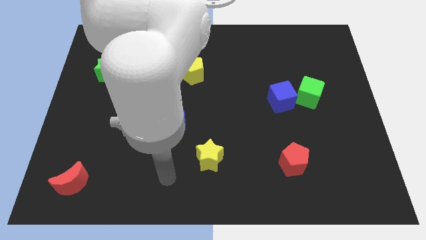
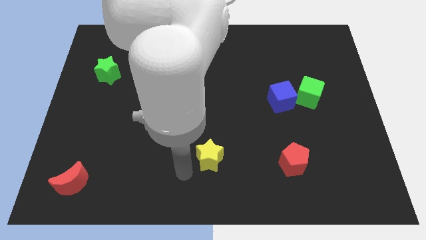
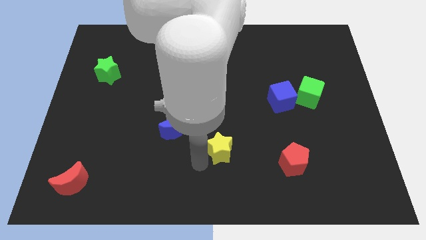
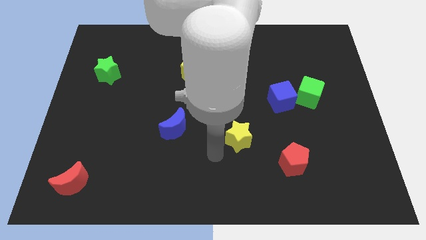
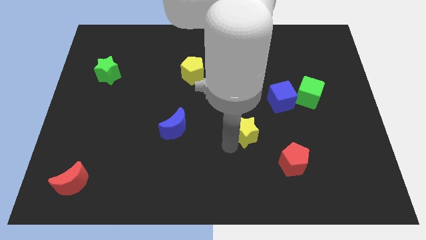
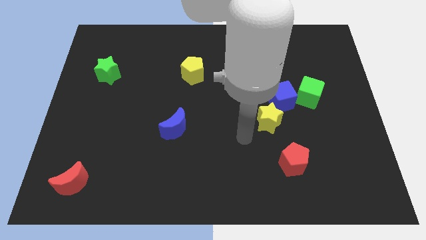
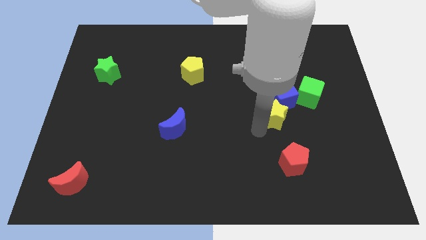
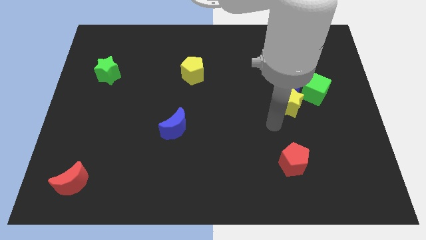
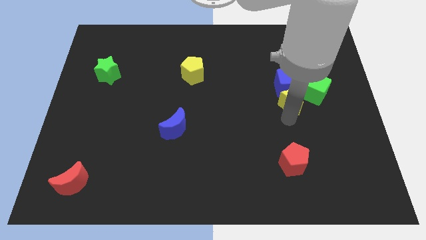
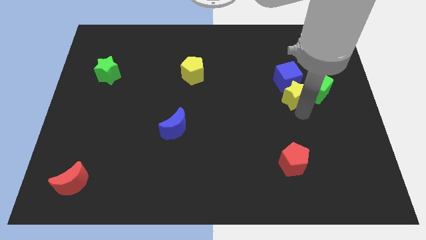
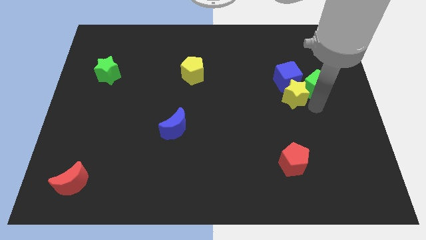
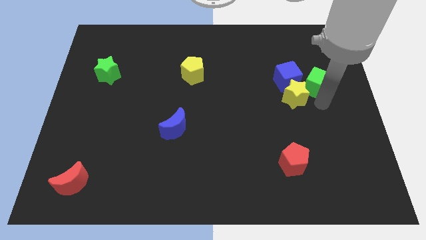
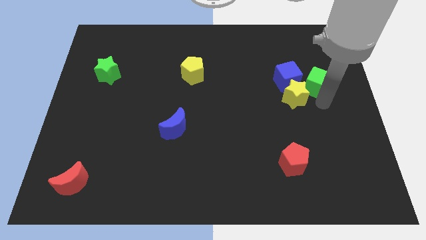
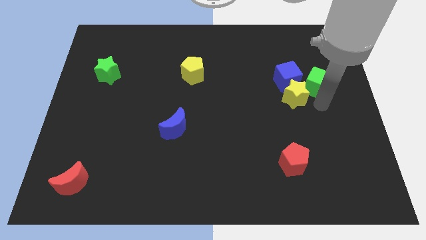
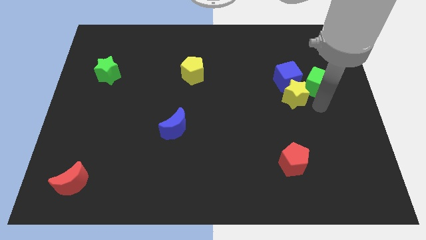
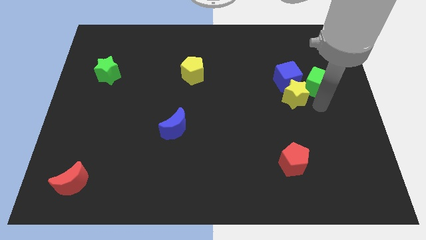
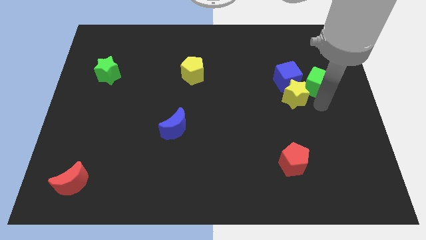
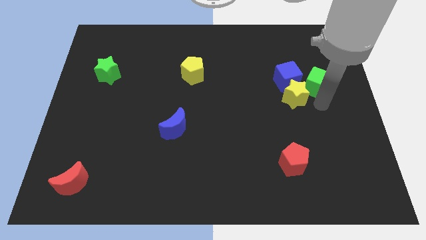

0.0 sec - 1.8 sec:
place the yellow star to the bottom of the blue cube

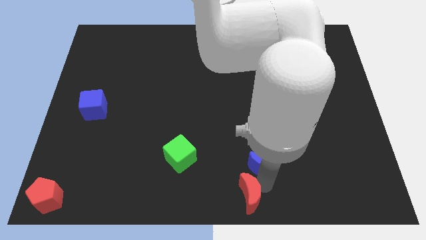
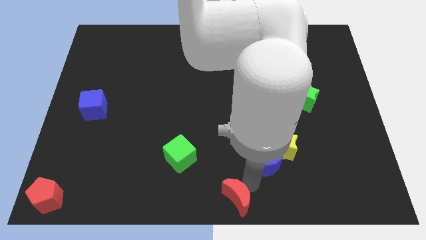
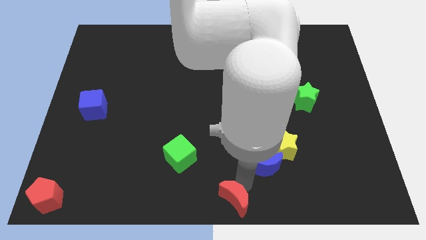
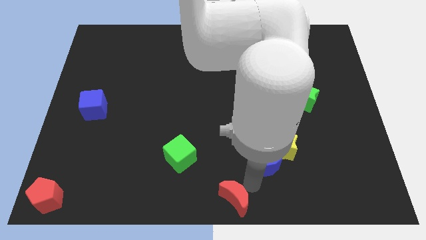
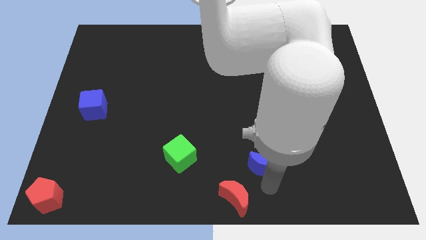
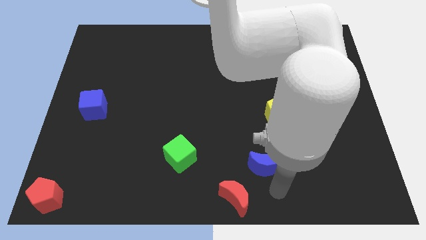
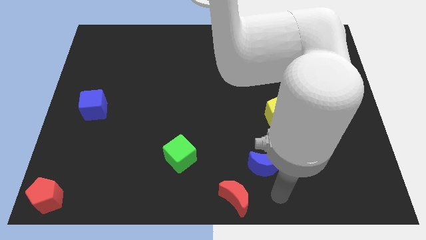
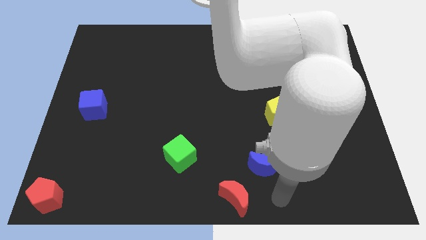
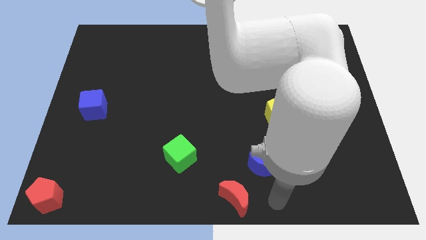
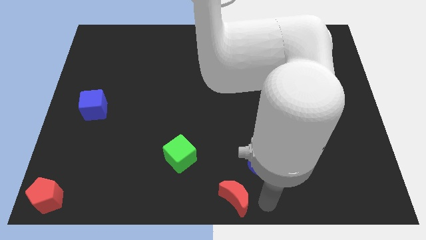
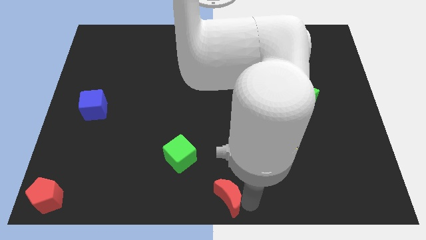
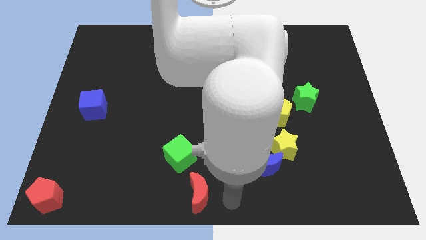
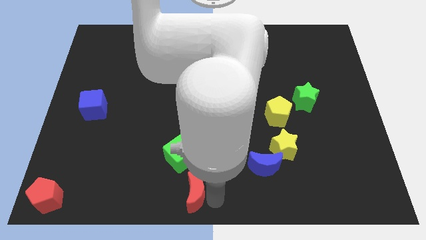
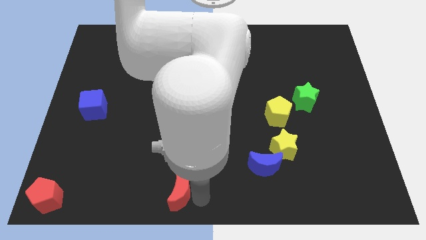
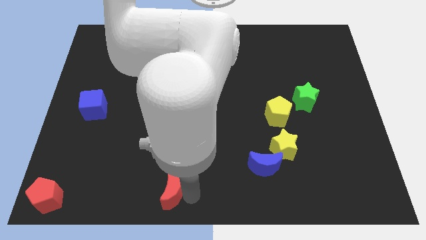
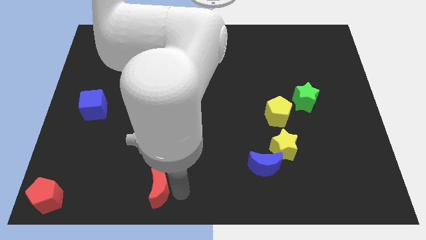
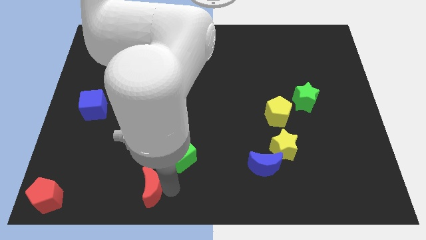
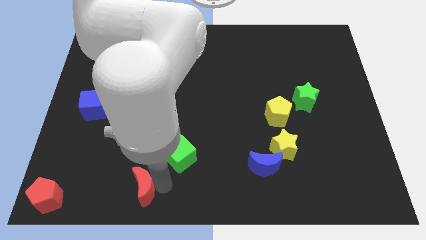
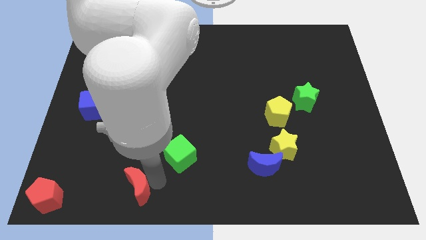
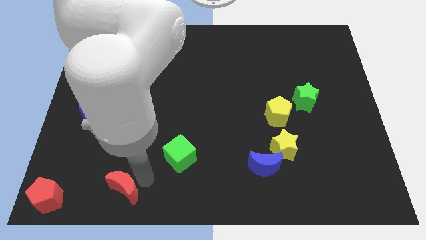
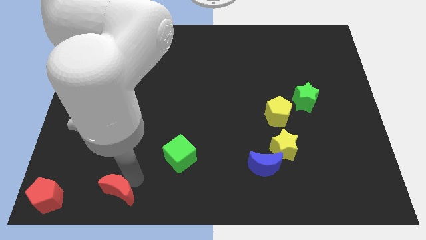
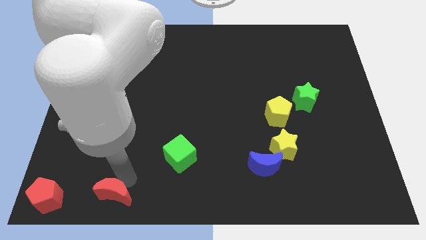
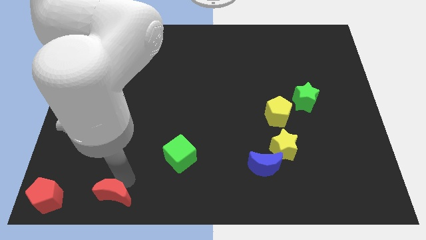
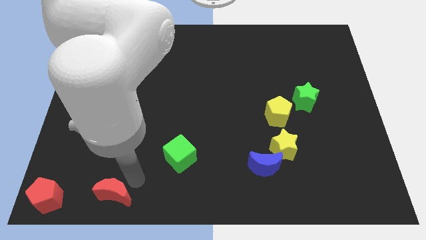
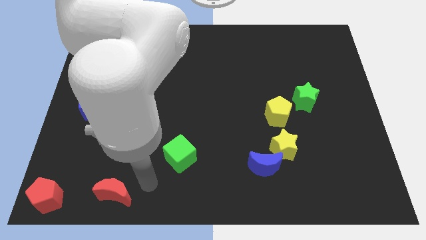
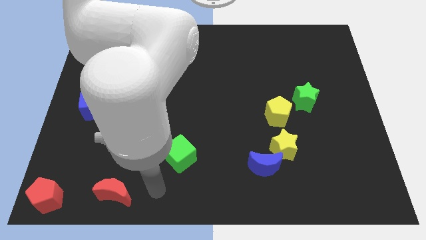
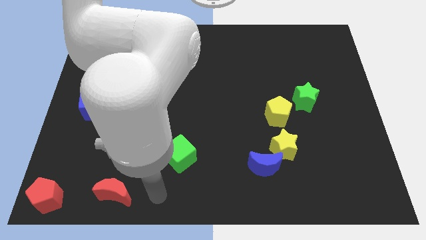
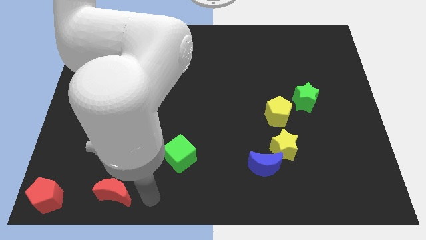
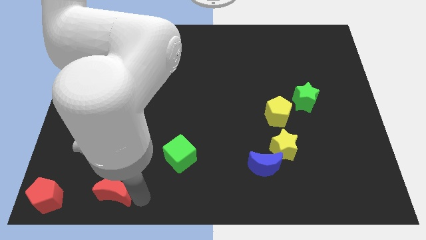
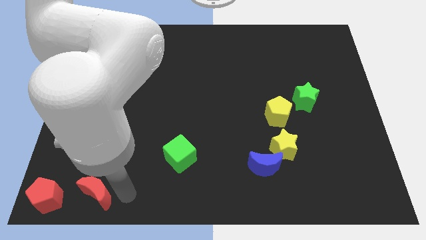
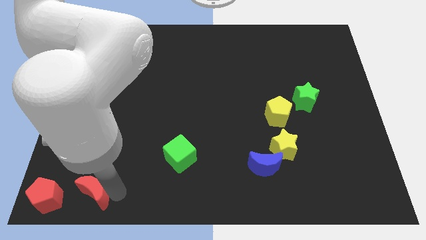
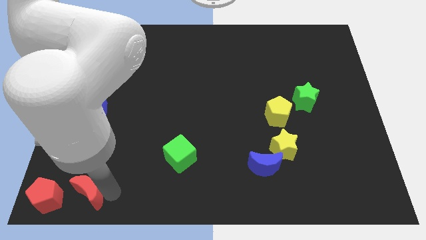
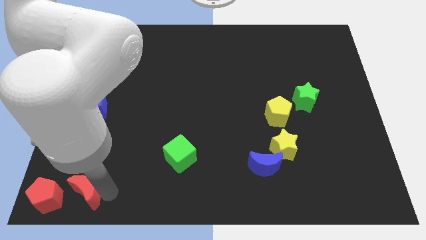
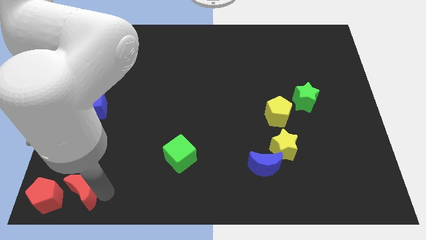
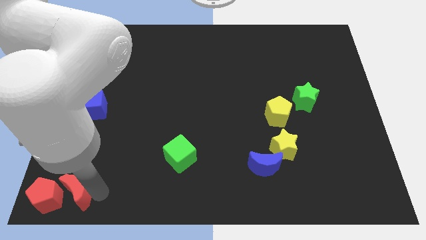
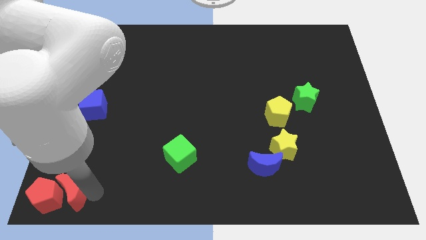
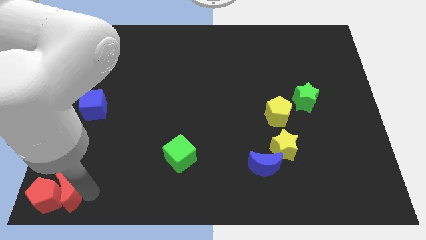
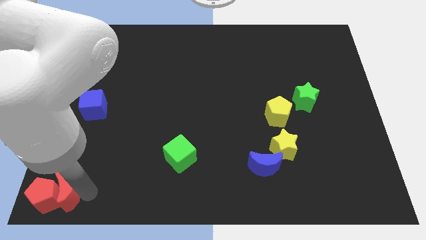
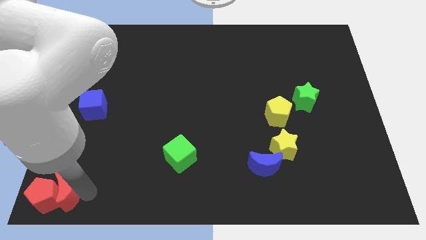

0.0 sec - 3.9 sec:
move the red crescent right to the red pentagon

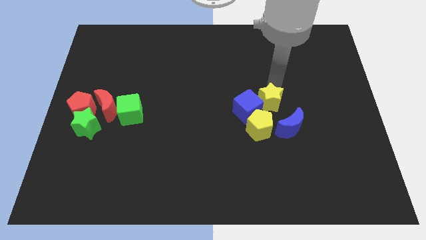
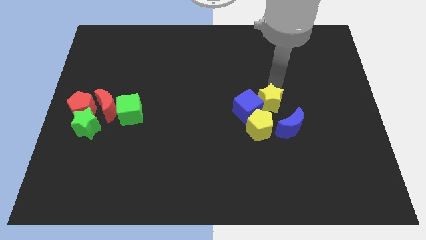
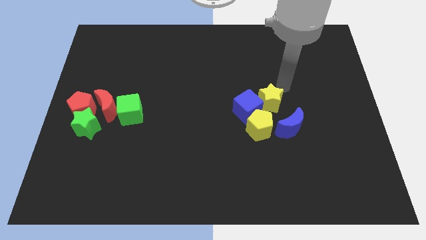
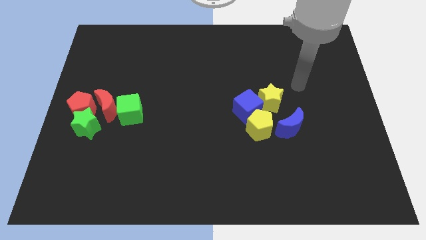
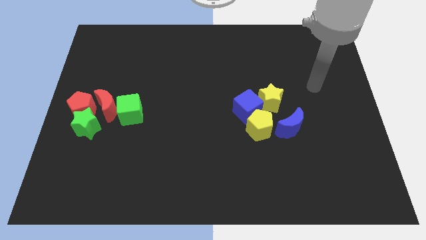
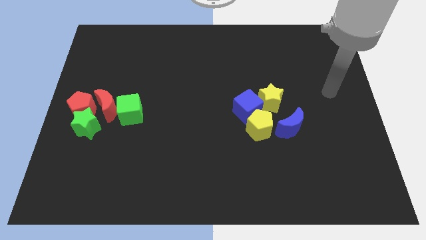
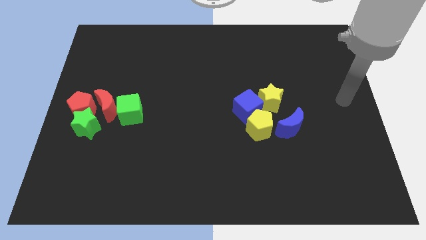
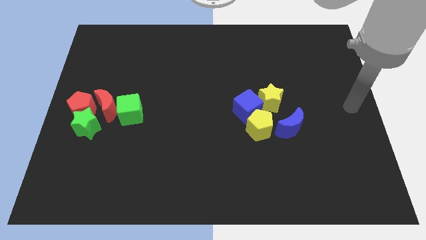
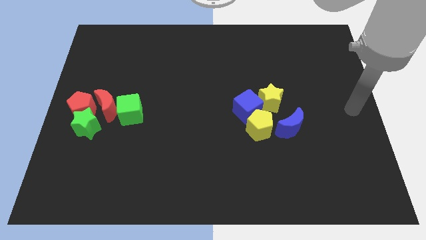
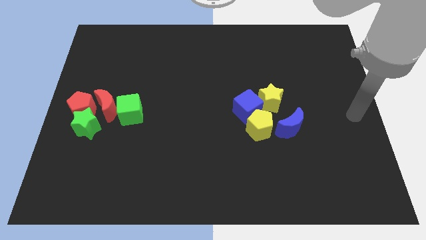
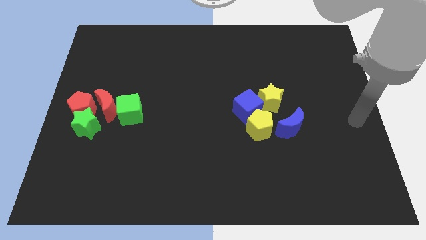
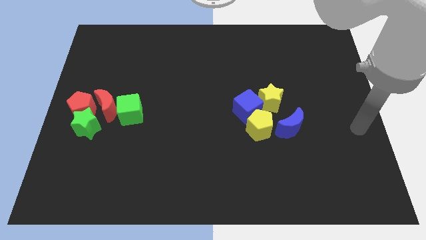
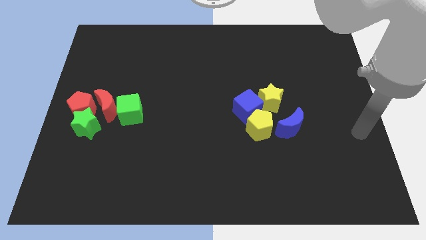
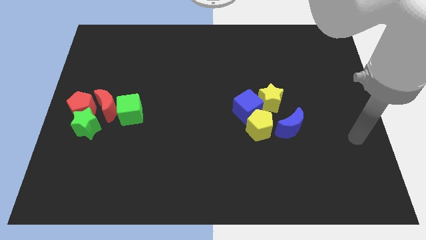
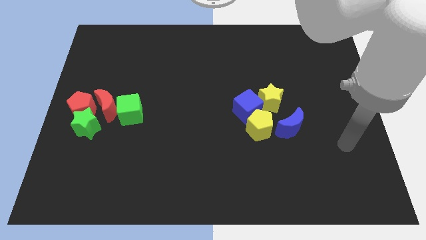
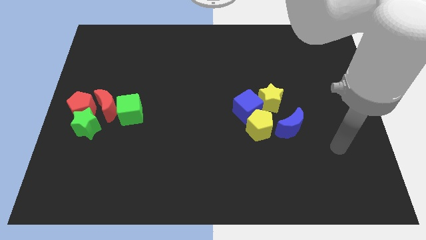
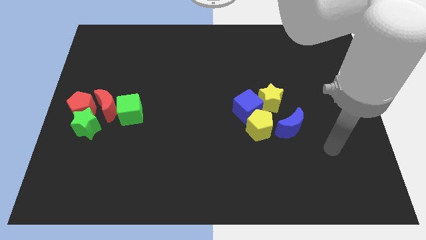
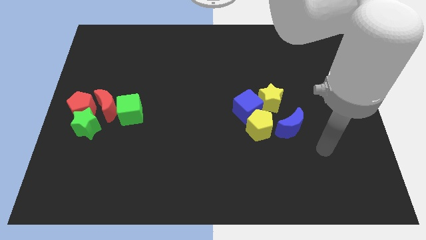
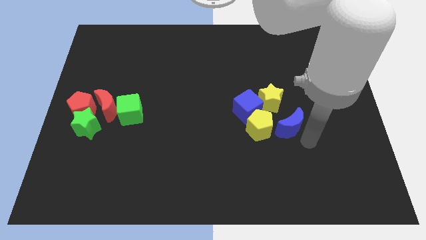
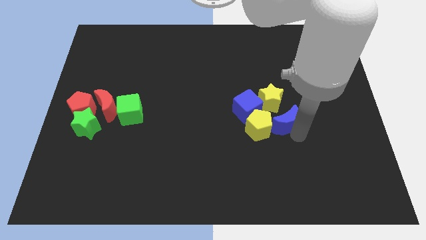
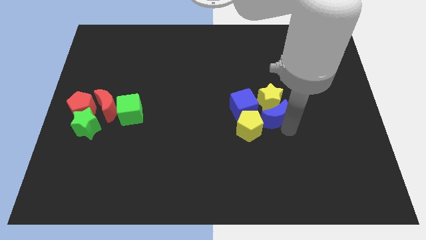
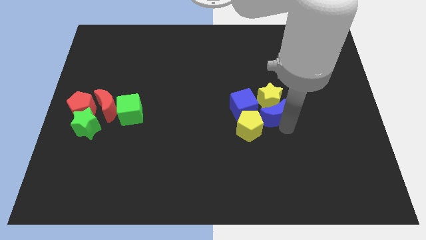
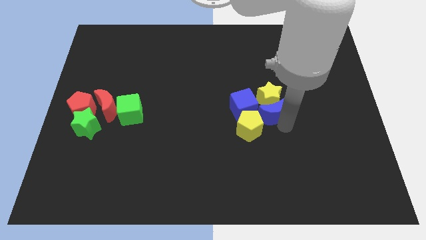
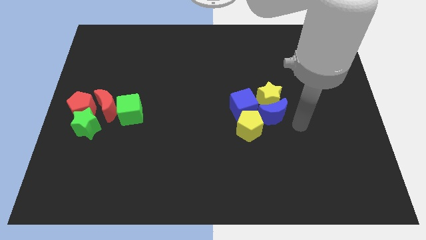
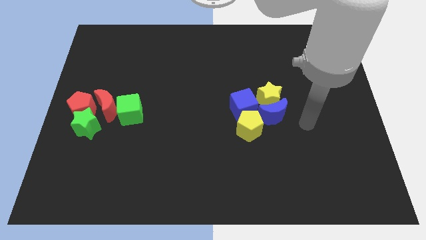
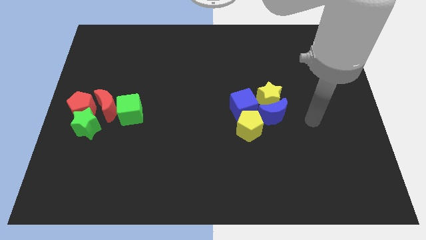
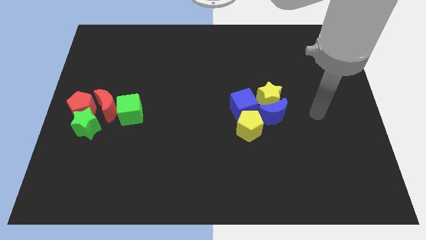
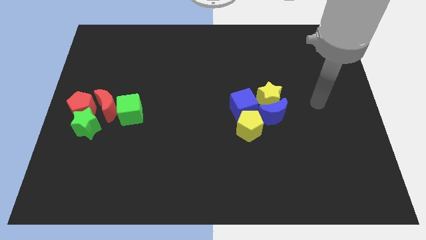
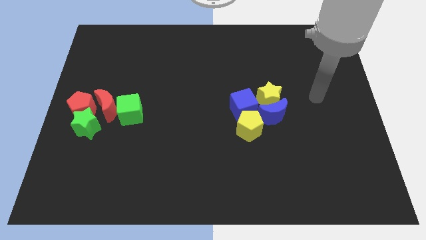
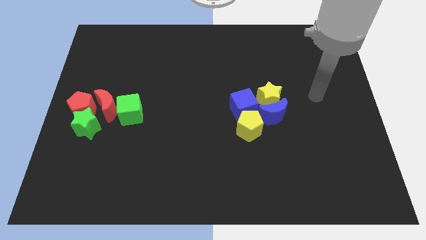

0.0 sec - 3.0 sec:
push blue crescent towards yellow star

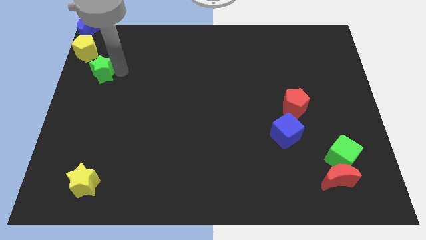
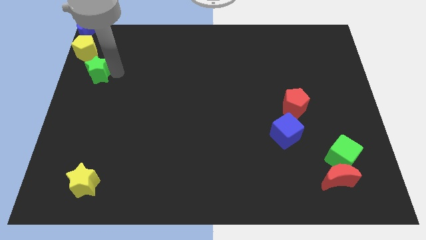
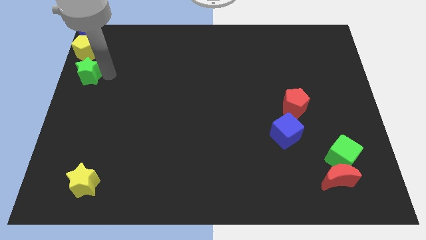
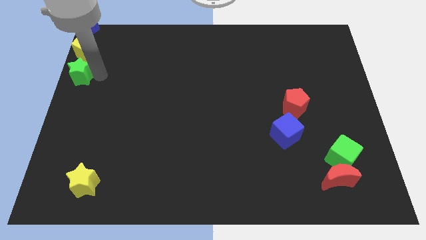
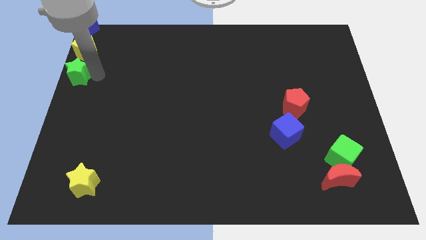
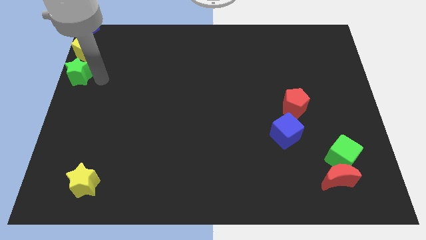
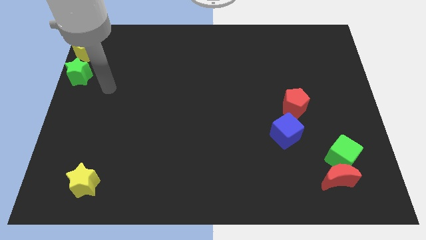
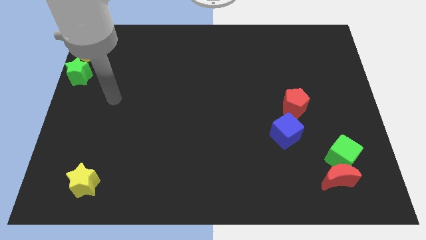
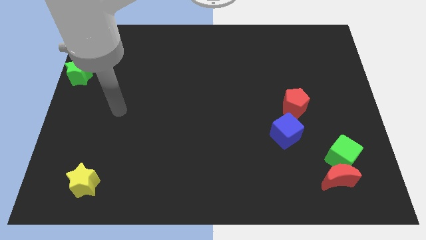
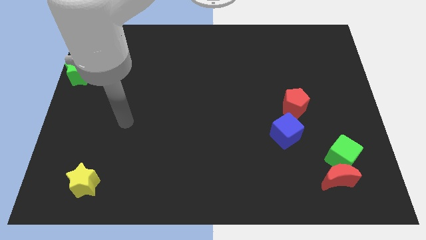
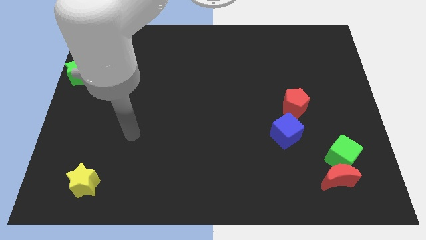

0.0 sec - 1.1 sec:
place the green star below the yellow pentagon to form a vertical line
